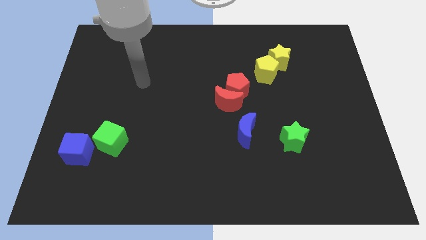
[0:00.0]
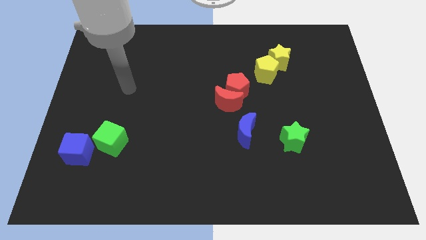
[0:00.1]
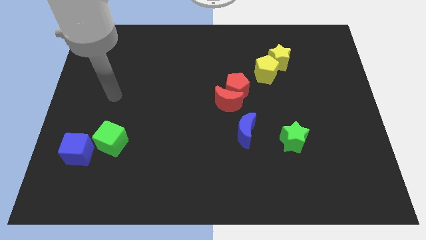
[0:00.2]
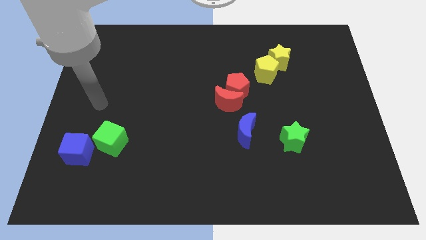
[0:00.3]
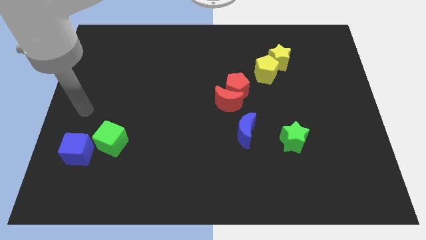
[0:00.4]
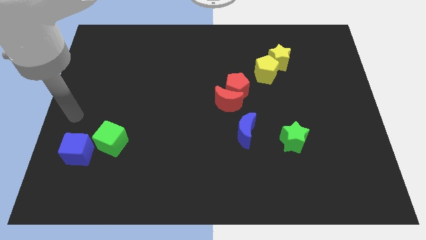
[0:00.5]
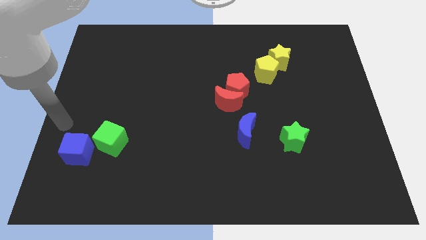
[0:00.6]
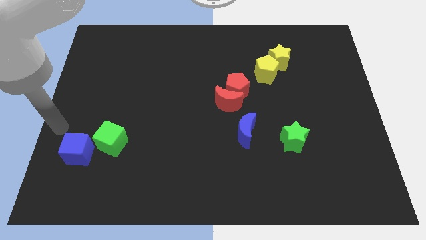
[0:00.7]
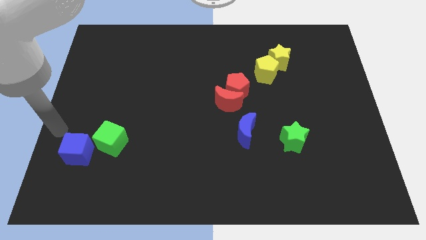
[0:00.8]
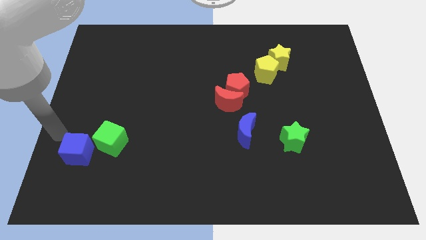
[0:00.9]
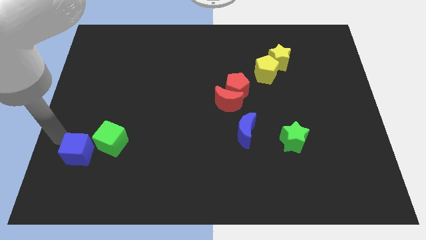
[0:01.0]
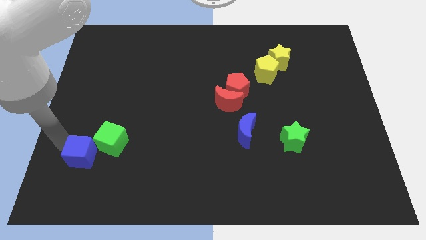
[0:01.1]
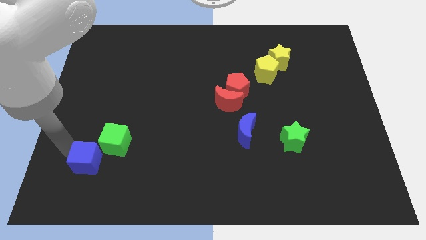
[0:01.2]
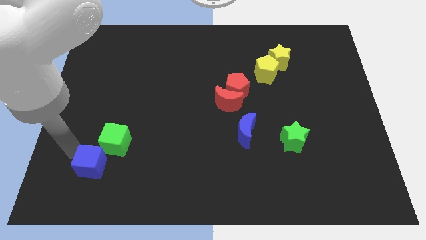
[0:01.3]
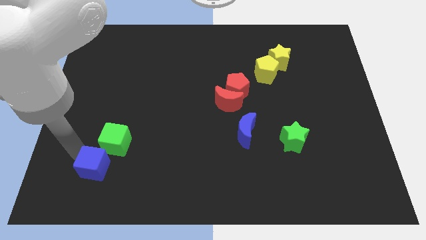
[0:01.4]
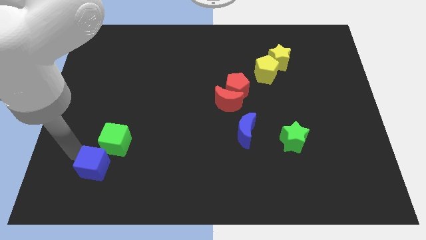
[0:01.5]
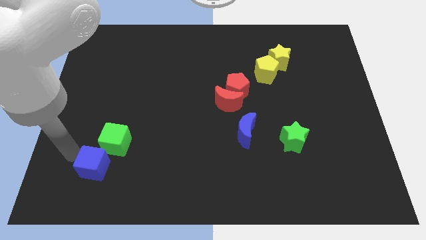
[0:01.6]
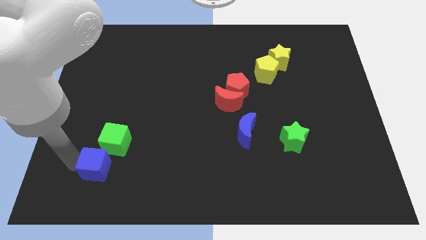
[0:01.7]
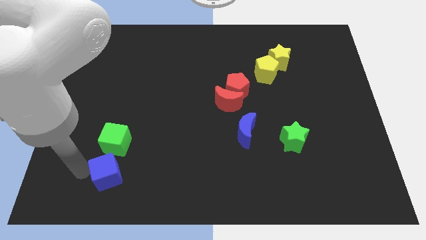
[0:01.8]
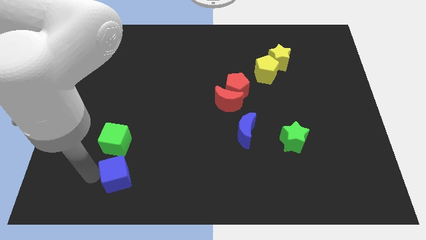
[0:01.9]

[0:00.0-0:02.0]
place the blue cube vertically below the green cube

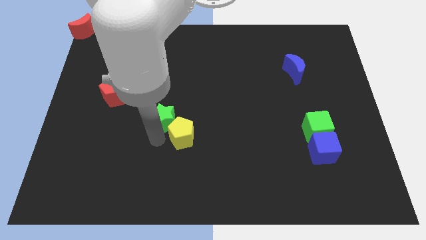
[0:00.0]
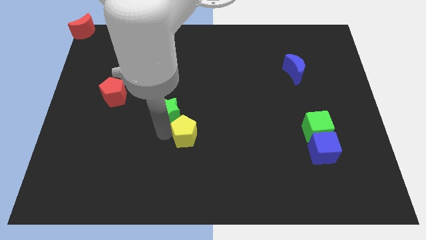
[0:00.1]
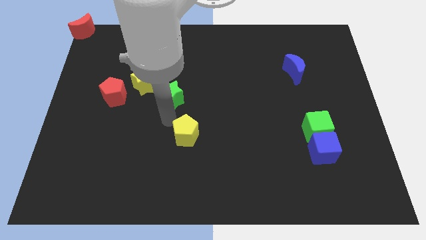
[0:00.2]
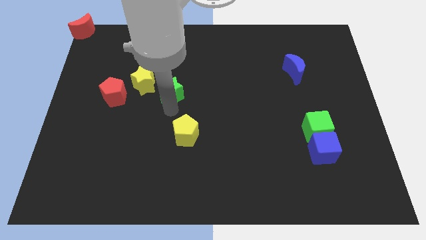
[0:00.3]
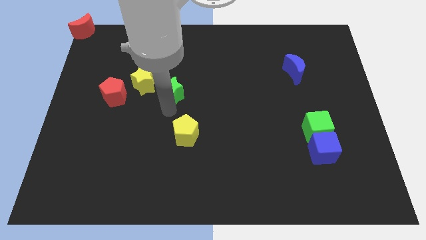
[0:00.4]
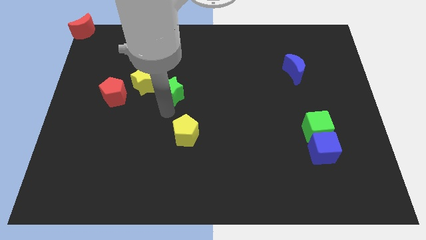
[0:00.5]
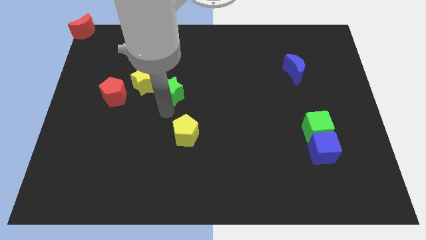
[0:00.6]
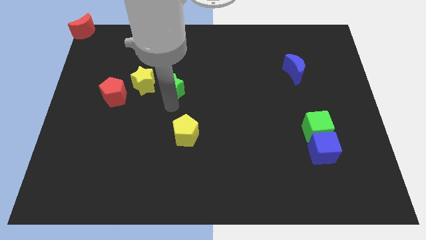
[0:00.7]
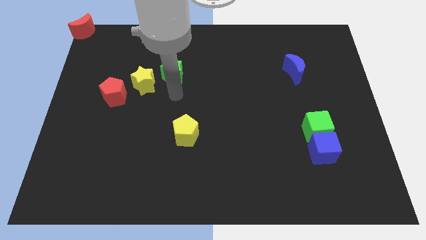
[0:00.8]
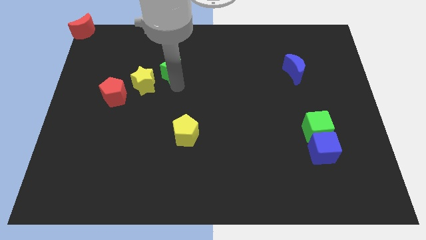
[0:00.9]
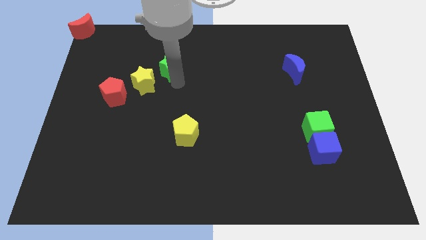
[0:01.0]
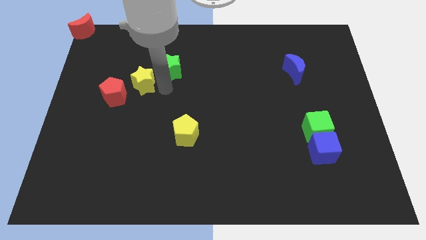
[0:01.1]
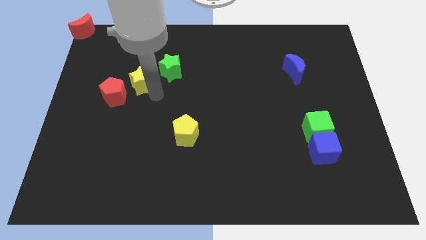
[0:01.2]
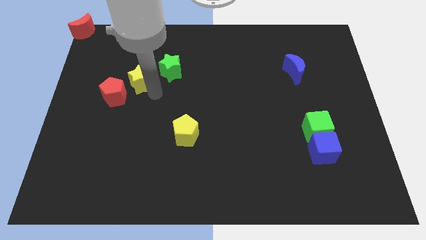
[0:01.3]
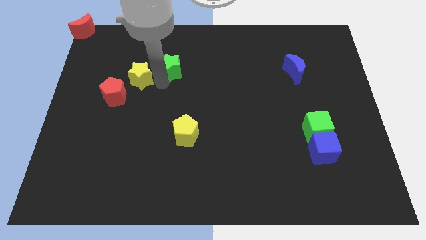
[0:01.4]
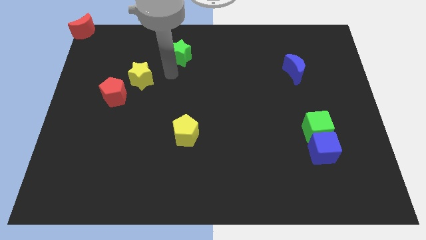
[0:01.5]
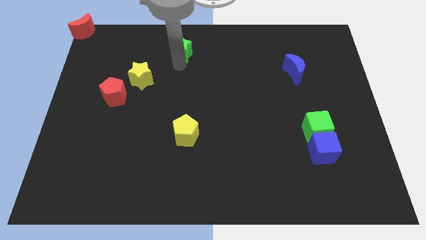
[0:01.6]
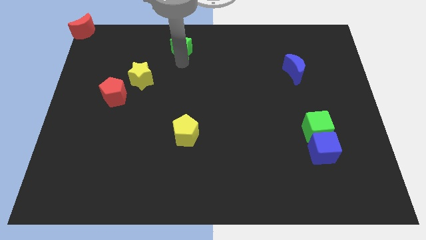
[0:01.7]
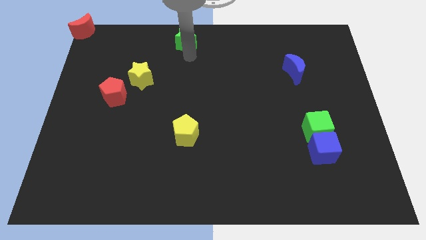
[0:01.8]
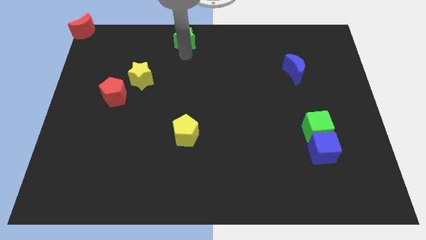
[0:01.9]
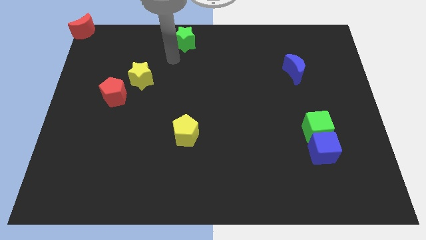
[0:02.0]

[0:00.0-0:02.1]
push the green star to the top of the board

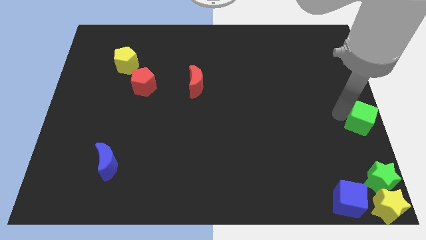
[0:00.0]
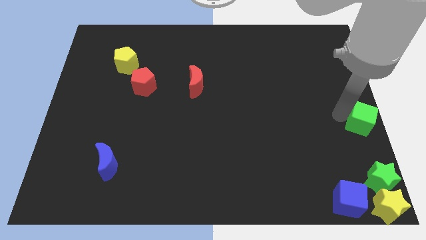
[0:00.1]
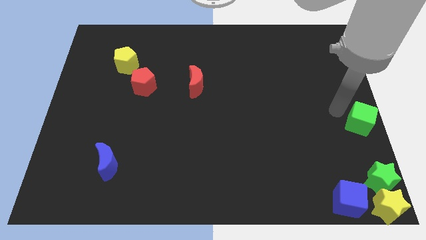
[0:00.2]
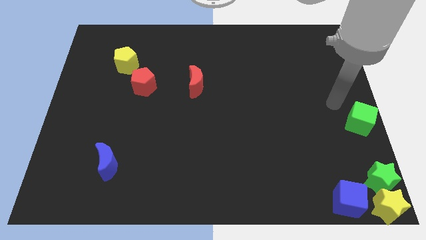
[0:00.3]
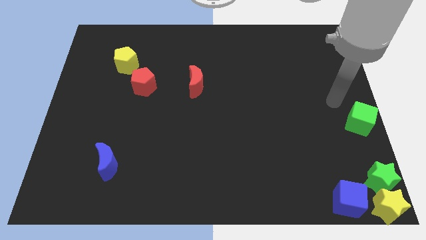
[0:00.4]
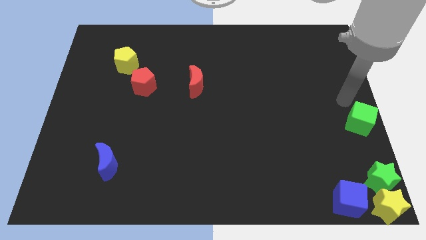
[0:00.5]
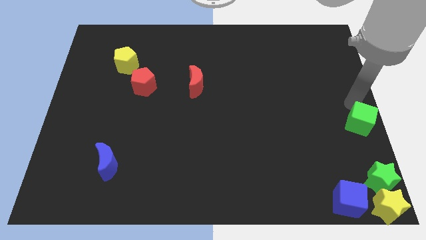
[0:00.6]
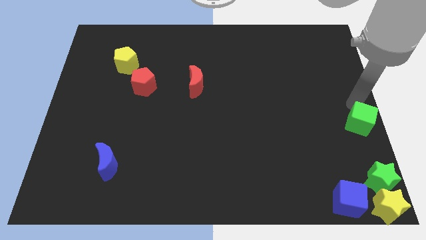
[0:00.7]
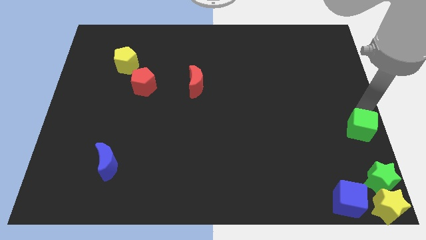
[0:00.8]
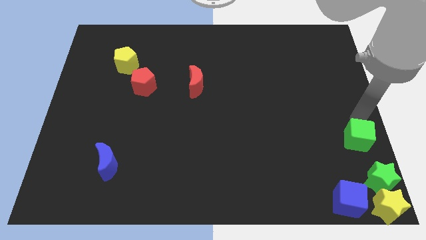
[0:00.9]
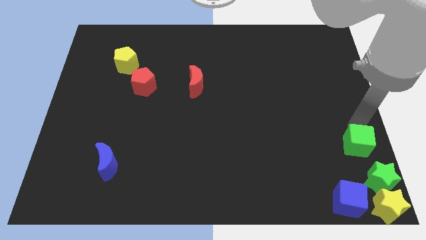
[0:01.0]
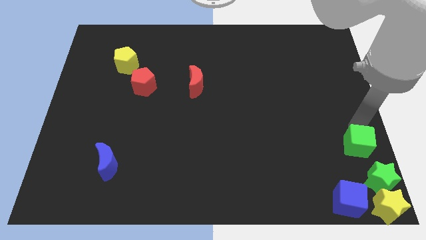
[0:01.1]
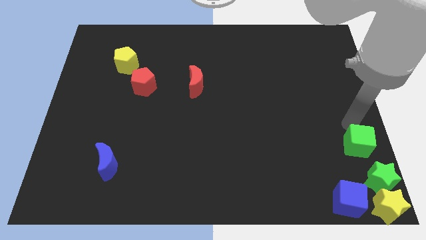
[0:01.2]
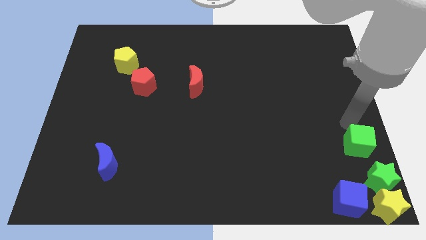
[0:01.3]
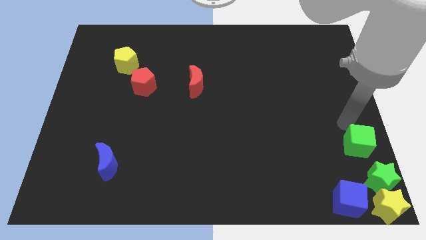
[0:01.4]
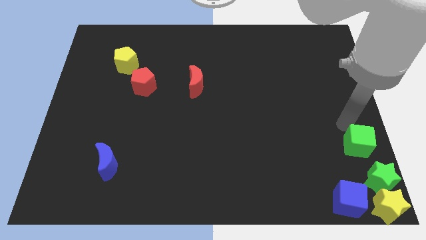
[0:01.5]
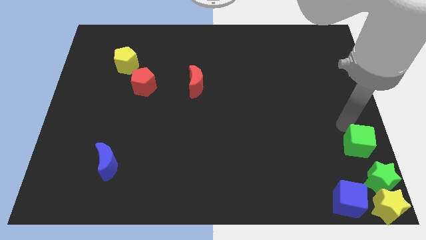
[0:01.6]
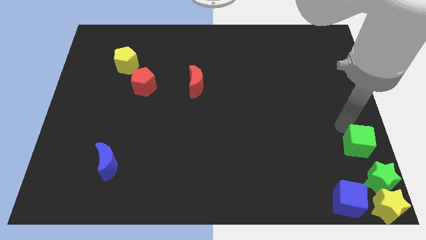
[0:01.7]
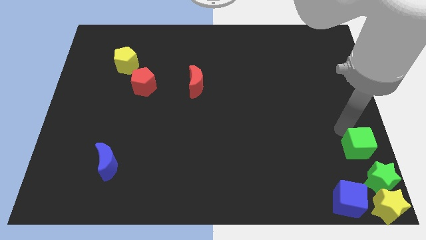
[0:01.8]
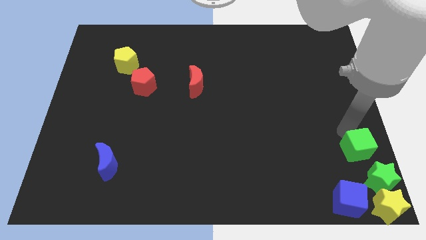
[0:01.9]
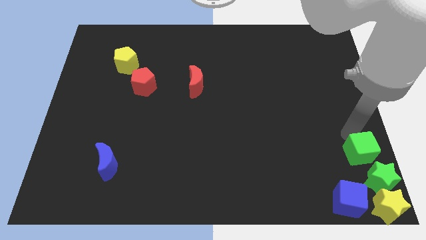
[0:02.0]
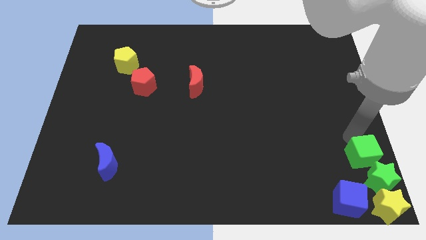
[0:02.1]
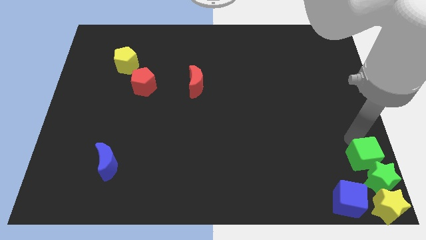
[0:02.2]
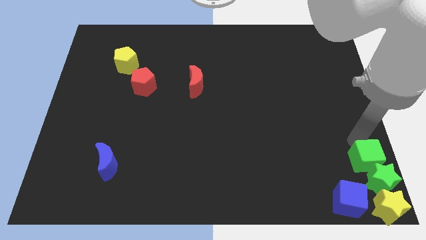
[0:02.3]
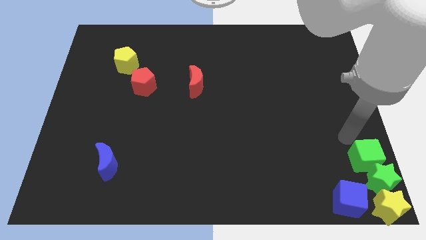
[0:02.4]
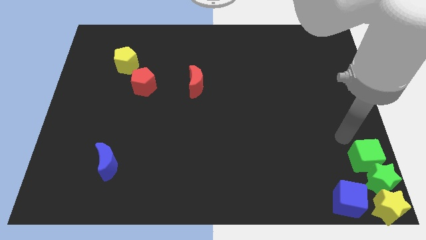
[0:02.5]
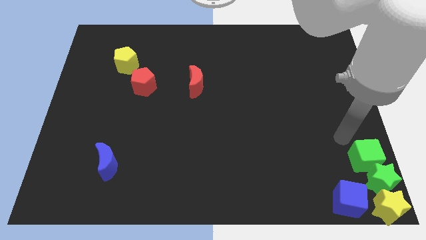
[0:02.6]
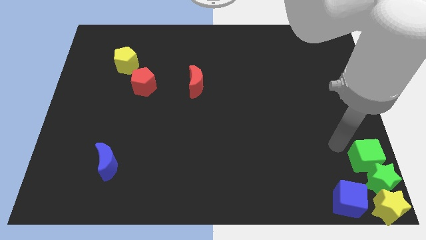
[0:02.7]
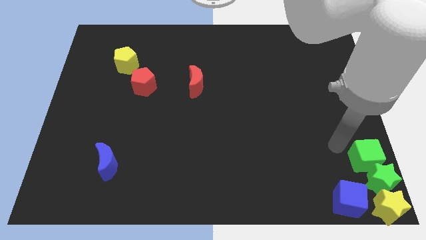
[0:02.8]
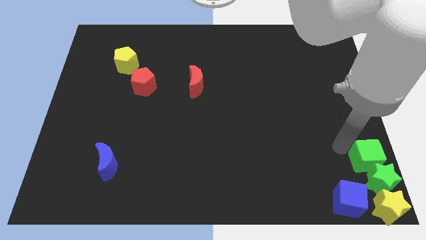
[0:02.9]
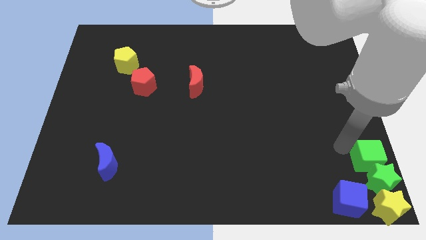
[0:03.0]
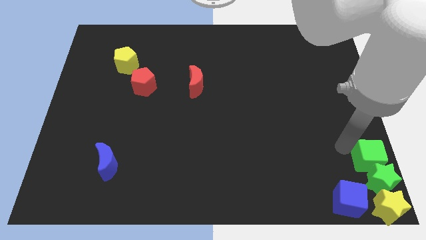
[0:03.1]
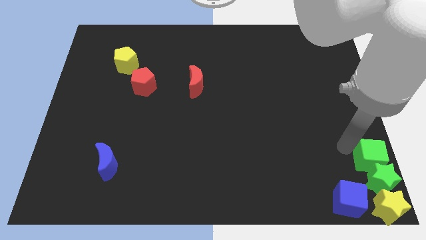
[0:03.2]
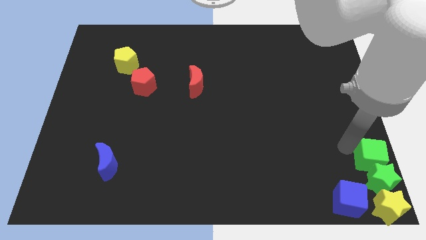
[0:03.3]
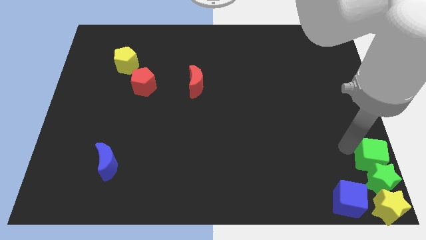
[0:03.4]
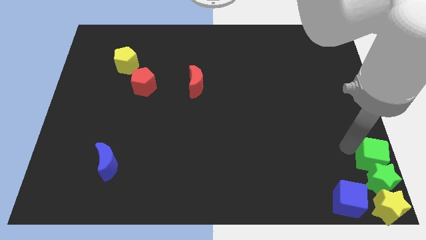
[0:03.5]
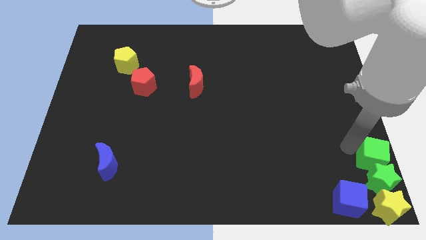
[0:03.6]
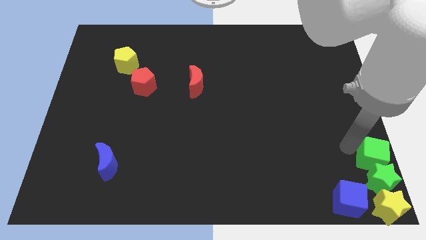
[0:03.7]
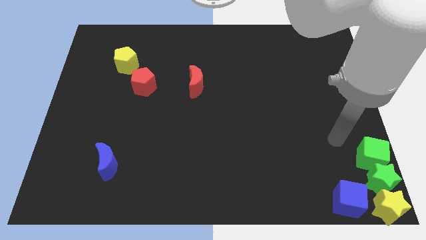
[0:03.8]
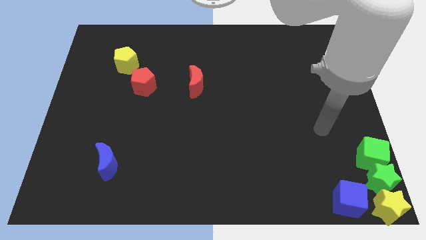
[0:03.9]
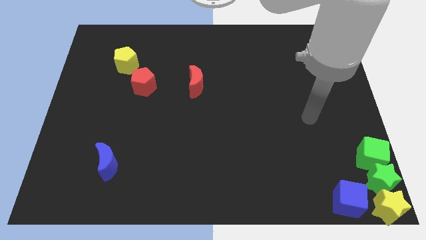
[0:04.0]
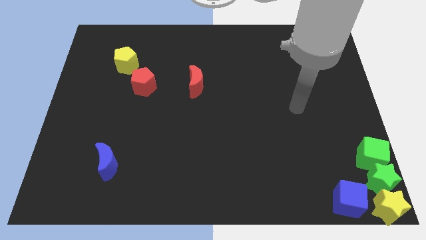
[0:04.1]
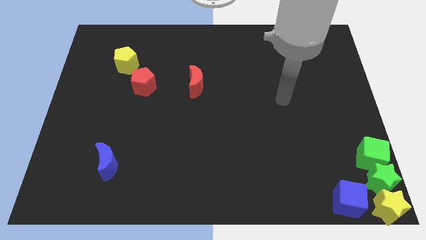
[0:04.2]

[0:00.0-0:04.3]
move the green cube to the top right side of the green star

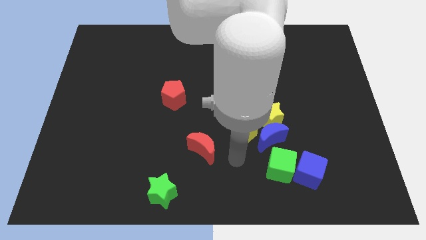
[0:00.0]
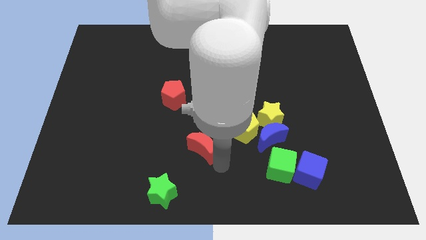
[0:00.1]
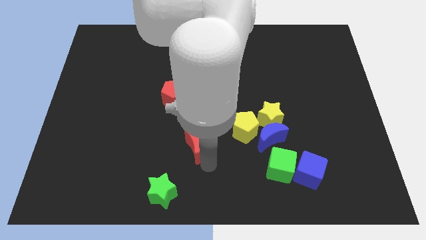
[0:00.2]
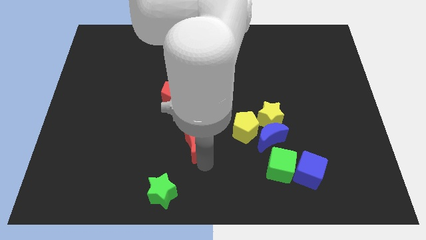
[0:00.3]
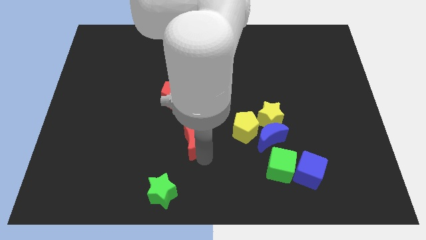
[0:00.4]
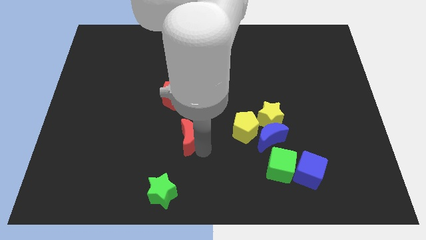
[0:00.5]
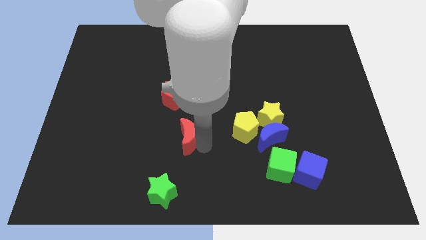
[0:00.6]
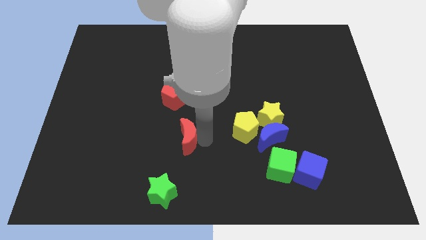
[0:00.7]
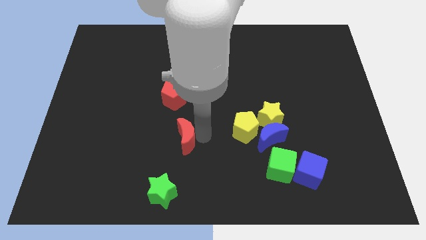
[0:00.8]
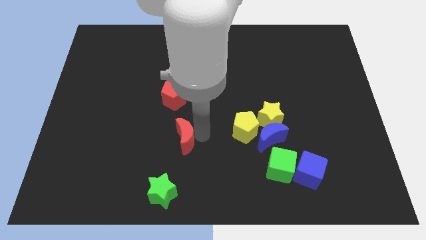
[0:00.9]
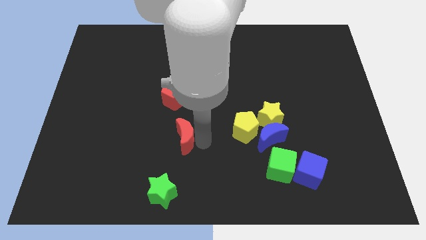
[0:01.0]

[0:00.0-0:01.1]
push red moon towards red pentagon
